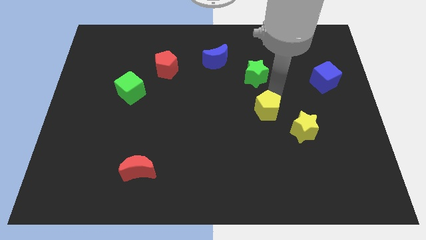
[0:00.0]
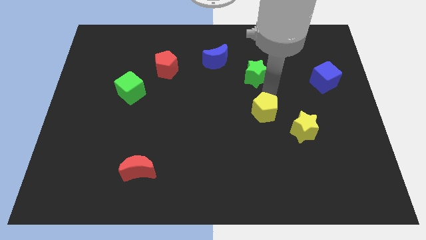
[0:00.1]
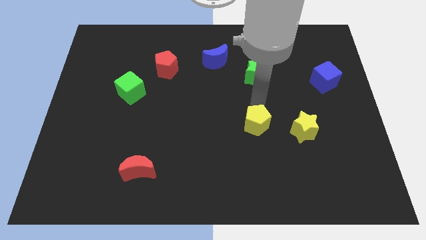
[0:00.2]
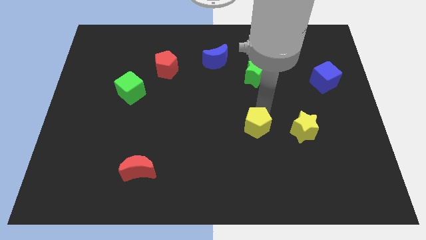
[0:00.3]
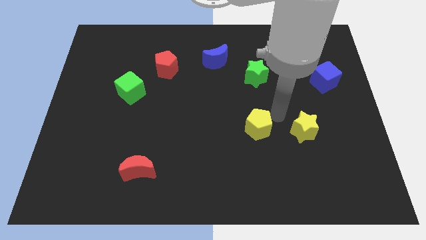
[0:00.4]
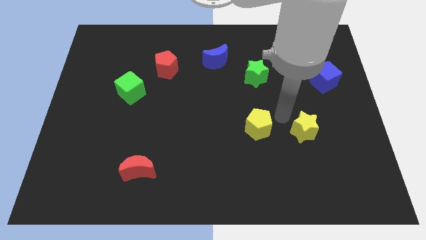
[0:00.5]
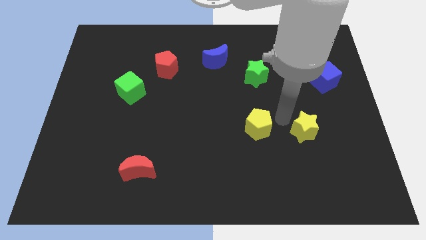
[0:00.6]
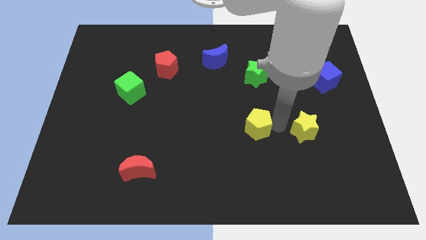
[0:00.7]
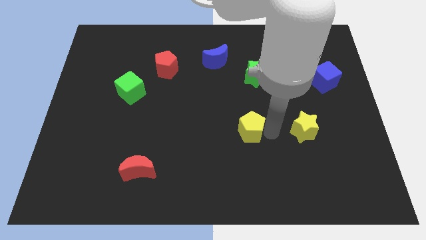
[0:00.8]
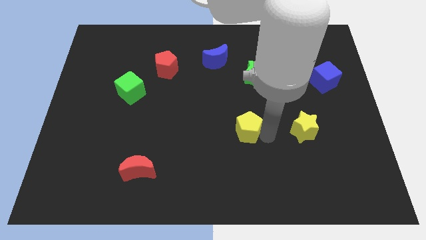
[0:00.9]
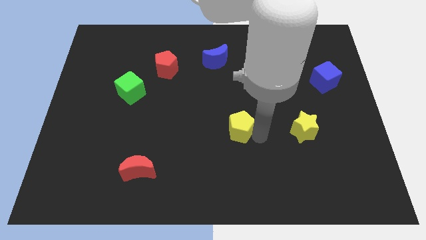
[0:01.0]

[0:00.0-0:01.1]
place the yellow pentagon to the left of the yellow star

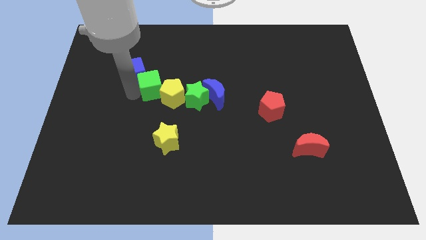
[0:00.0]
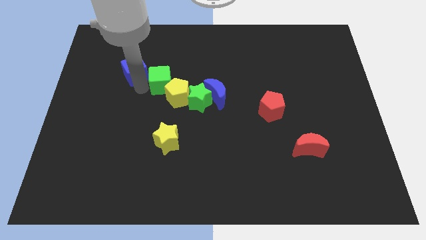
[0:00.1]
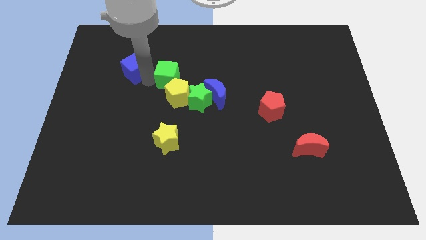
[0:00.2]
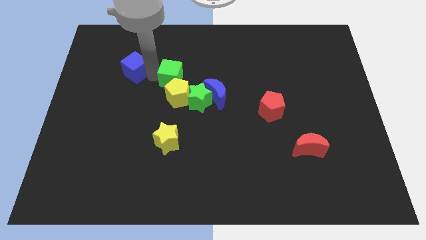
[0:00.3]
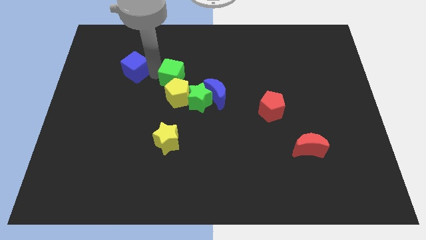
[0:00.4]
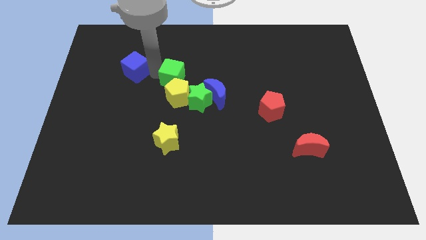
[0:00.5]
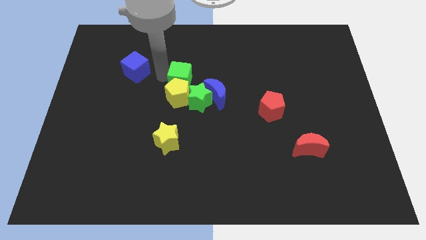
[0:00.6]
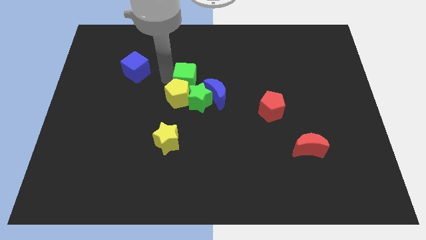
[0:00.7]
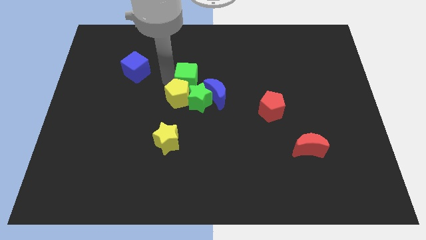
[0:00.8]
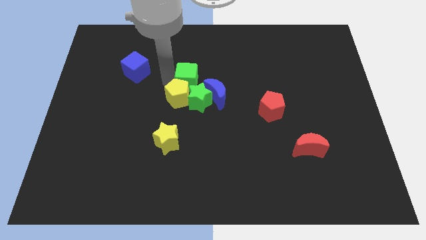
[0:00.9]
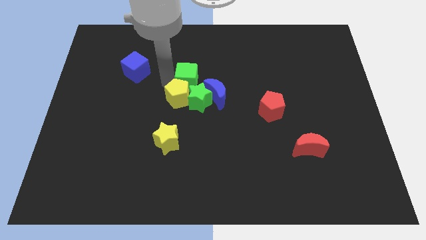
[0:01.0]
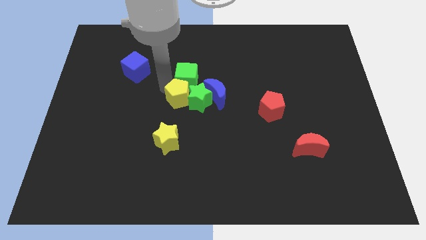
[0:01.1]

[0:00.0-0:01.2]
place the green cube above the yellow pentagon

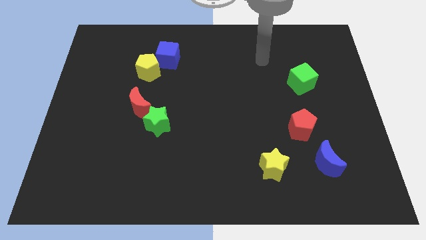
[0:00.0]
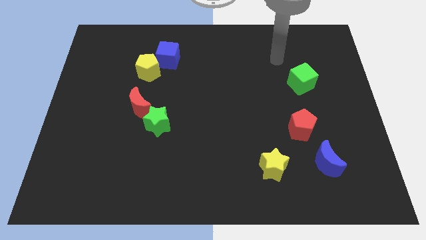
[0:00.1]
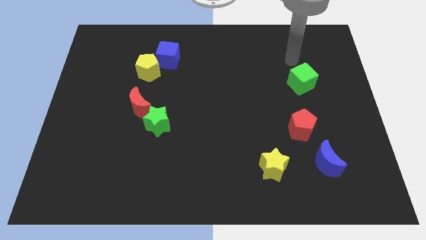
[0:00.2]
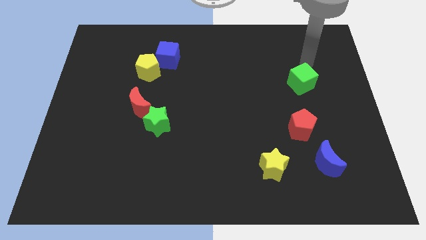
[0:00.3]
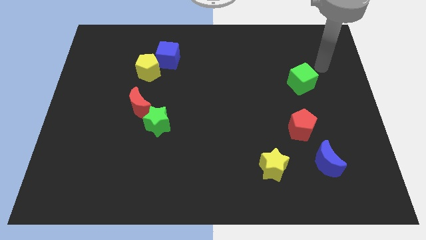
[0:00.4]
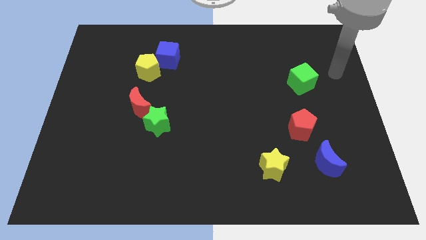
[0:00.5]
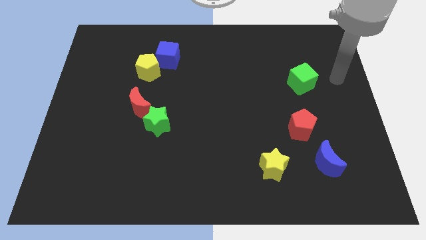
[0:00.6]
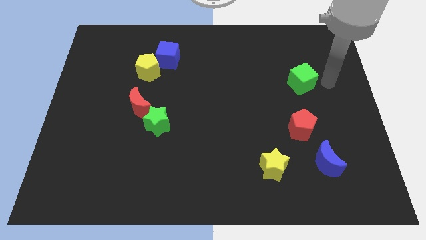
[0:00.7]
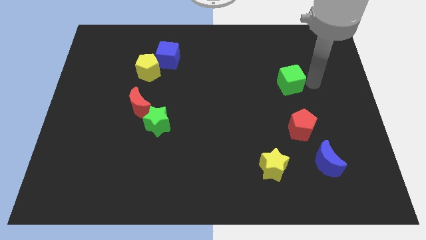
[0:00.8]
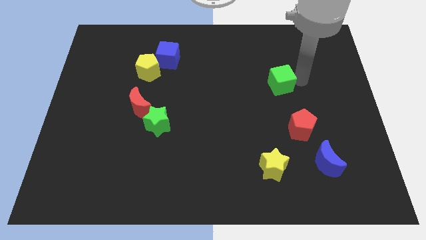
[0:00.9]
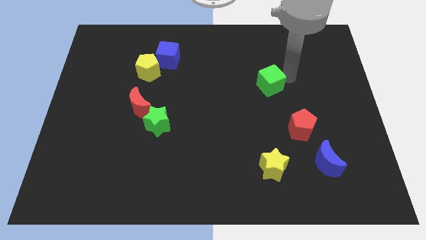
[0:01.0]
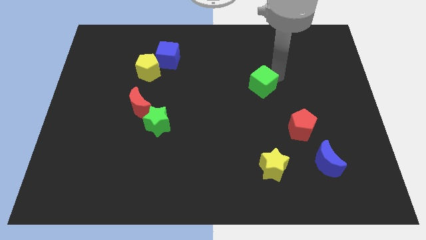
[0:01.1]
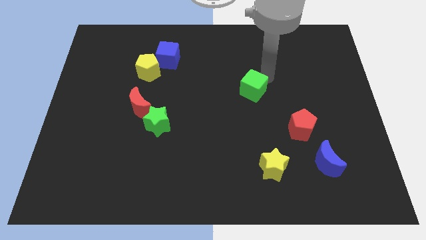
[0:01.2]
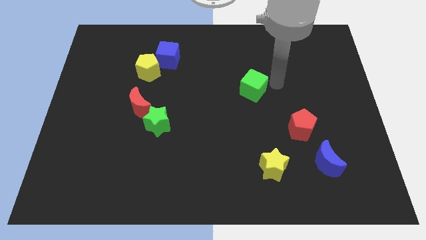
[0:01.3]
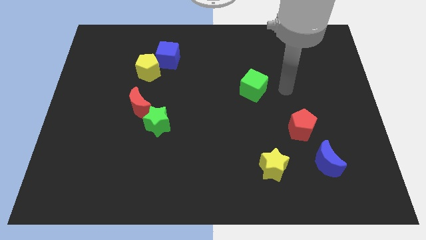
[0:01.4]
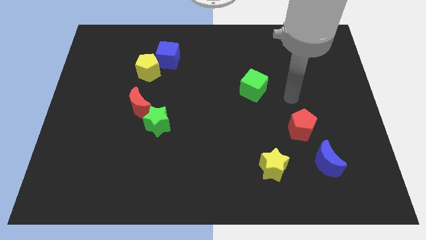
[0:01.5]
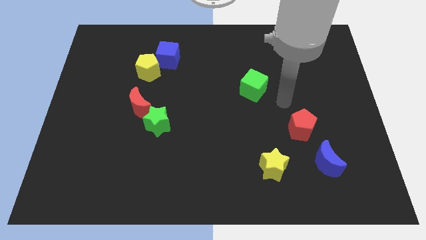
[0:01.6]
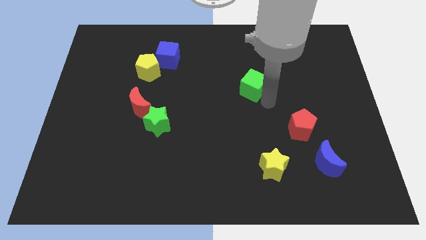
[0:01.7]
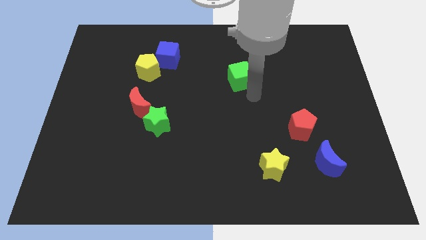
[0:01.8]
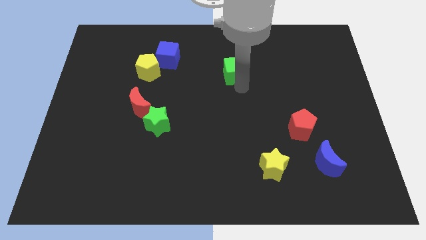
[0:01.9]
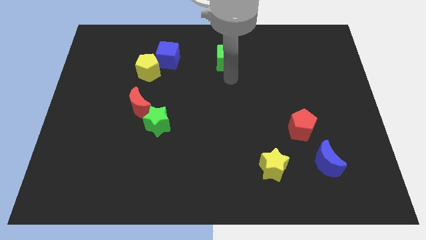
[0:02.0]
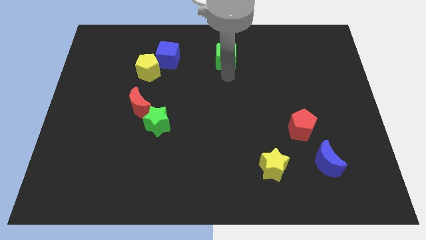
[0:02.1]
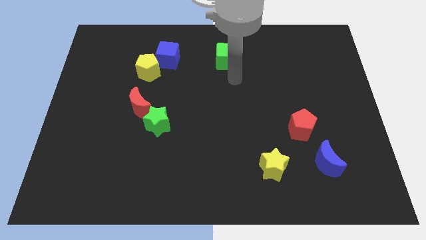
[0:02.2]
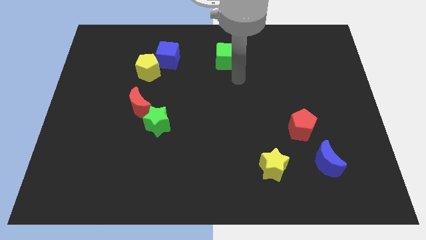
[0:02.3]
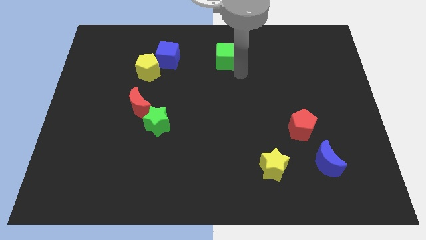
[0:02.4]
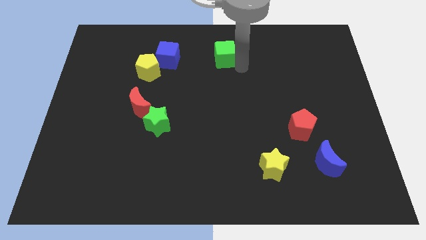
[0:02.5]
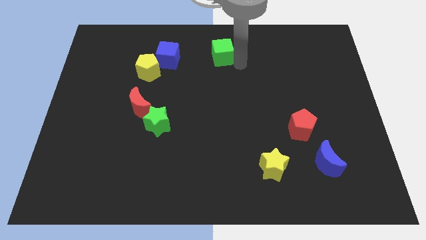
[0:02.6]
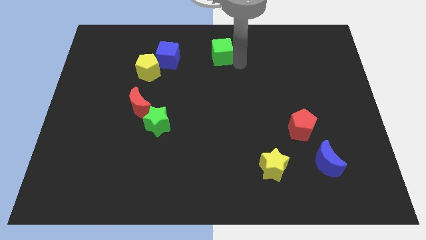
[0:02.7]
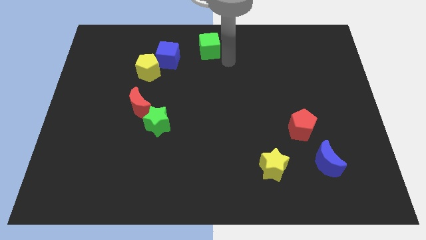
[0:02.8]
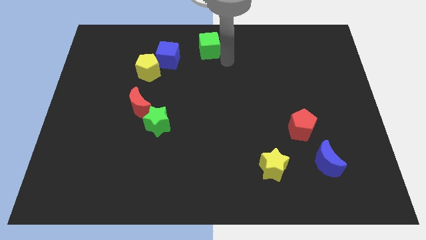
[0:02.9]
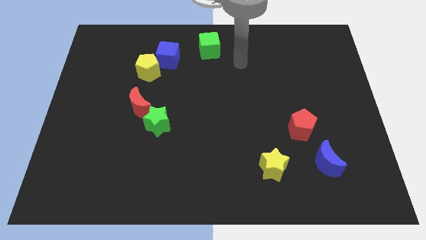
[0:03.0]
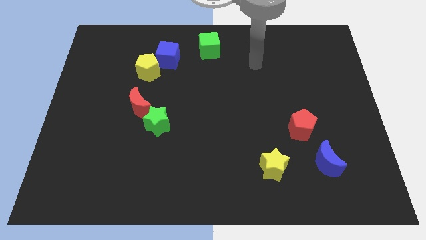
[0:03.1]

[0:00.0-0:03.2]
move the green cube to the right of the blue cube

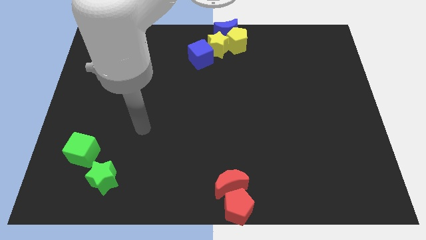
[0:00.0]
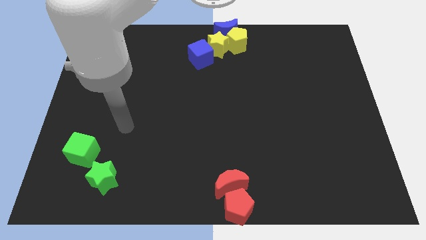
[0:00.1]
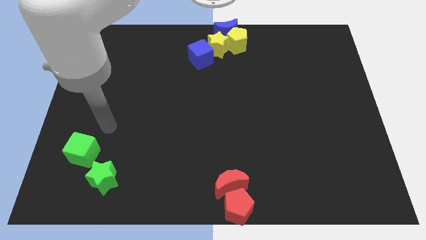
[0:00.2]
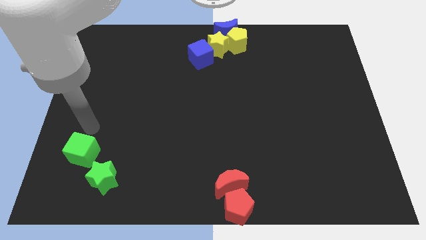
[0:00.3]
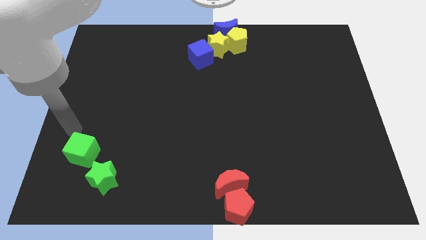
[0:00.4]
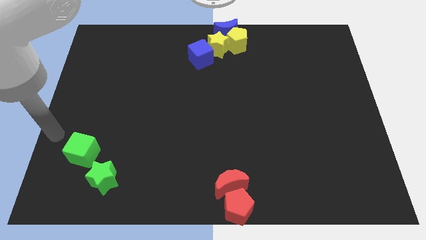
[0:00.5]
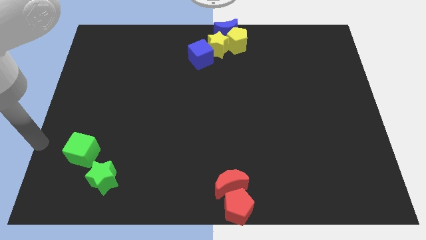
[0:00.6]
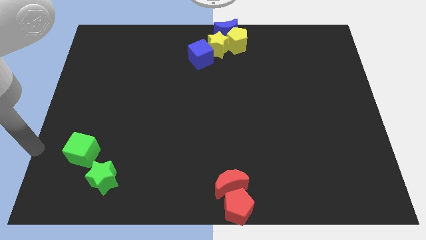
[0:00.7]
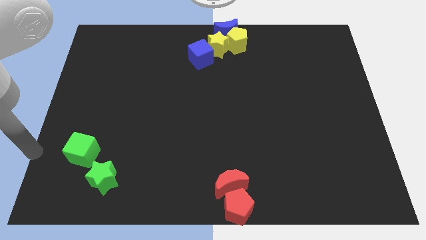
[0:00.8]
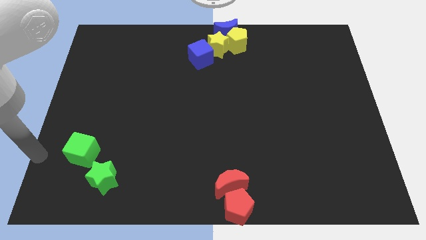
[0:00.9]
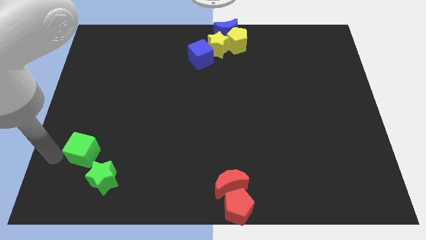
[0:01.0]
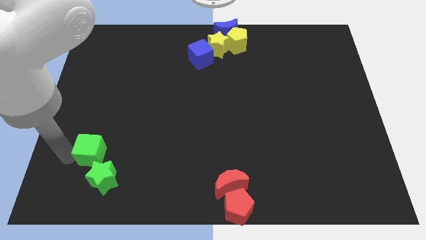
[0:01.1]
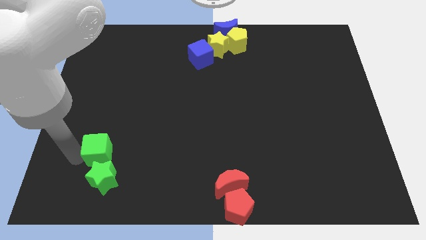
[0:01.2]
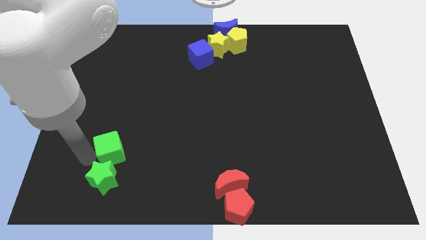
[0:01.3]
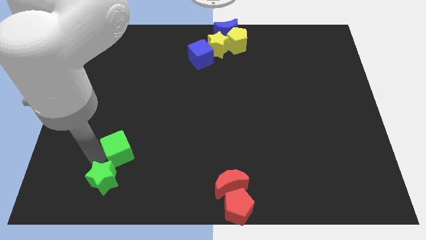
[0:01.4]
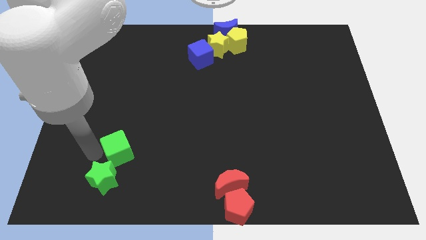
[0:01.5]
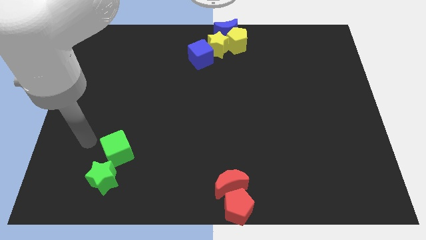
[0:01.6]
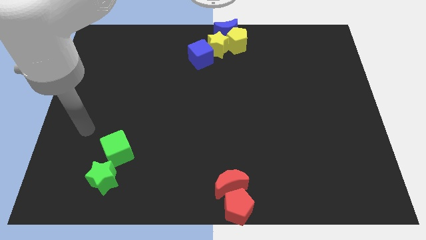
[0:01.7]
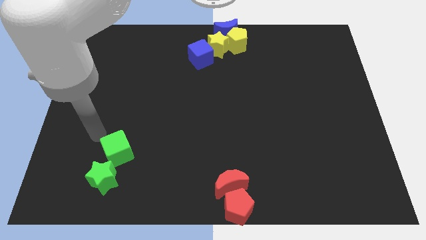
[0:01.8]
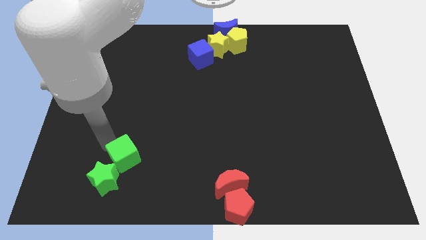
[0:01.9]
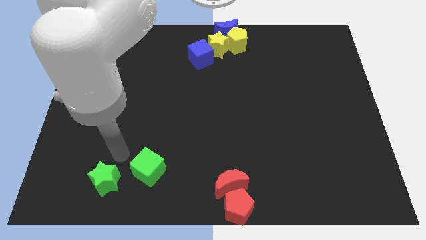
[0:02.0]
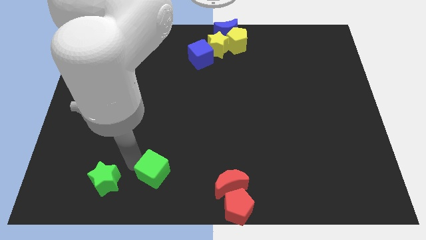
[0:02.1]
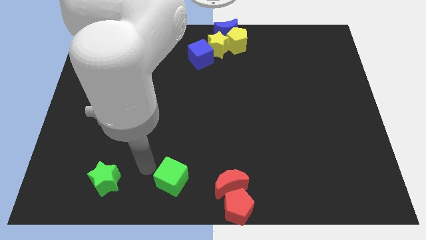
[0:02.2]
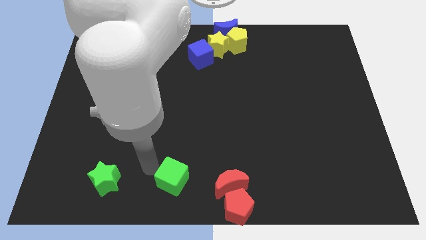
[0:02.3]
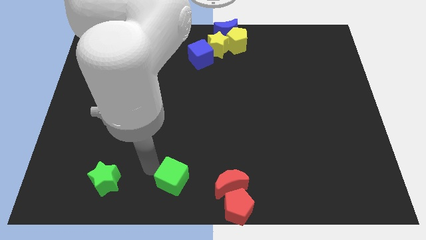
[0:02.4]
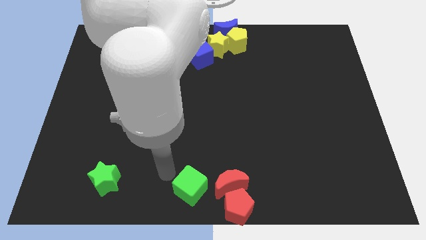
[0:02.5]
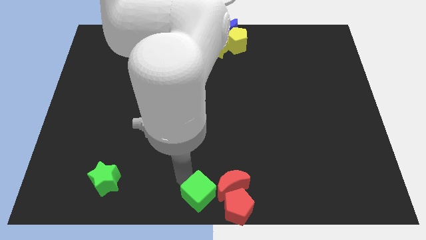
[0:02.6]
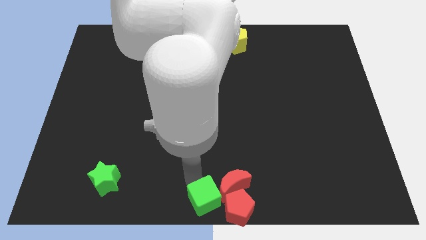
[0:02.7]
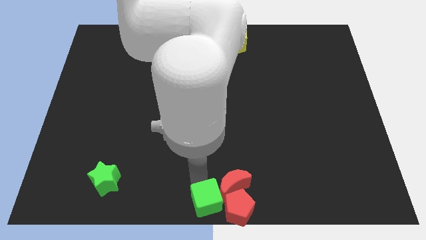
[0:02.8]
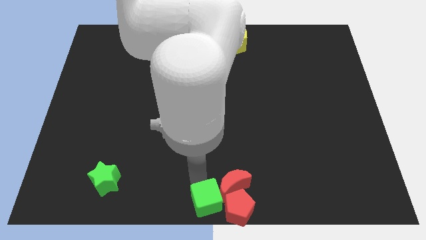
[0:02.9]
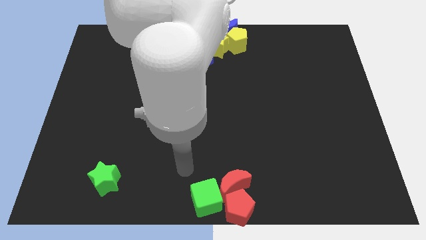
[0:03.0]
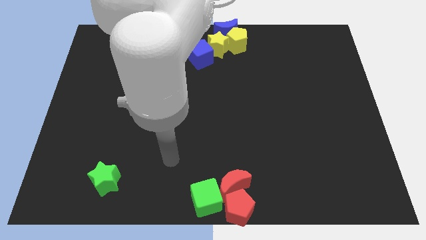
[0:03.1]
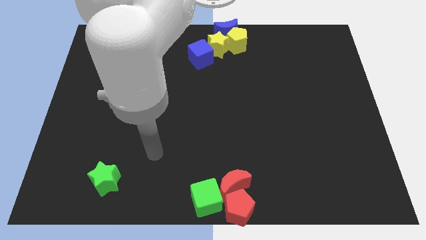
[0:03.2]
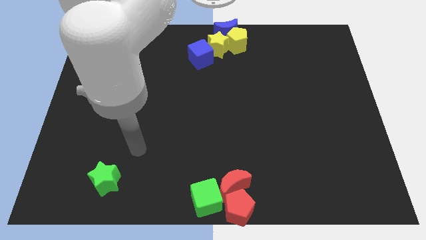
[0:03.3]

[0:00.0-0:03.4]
push the green star into red crescent
